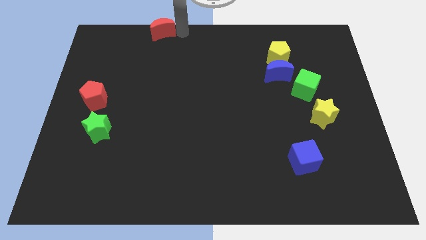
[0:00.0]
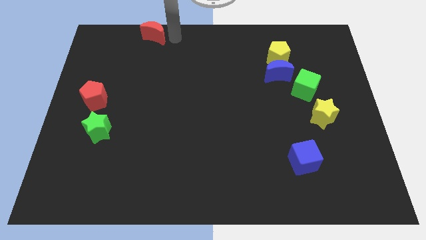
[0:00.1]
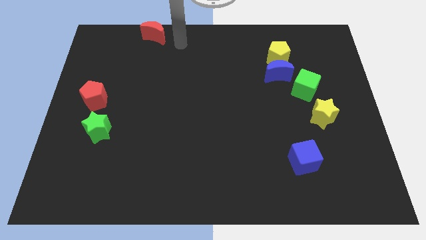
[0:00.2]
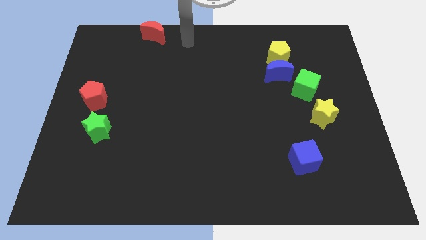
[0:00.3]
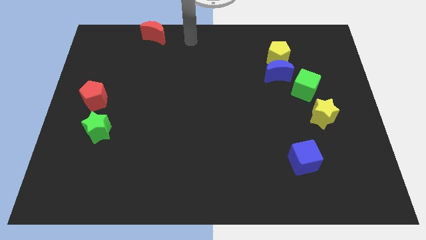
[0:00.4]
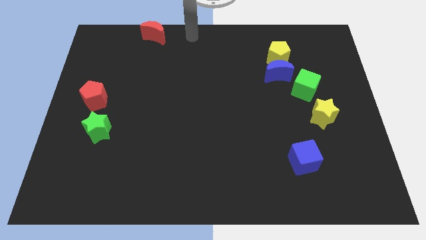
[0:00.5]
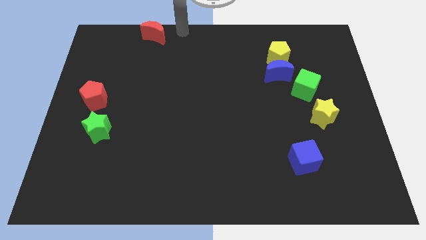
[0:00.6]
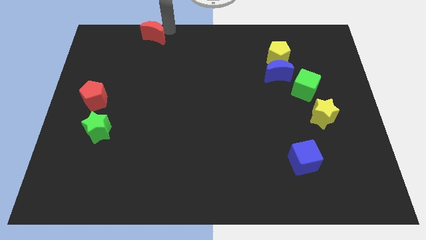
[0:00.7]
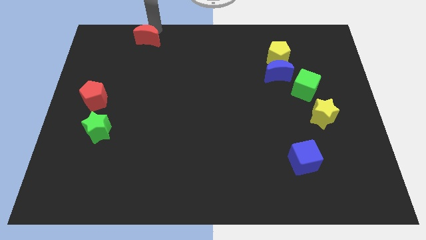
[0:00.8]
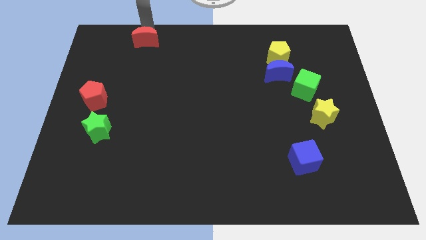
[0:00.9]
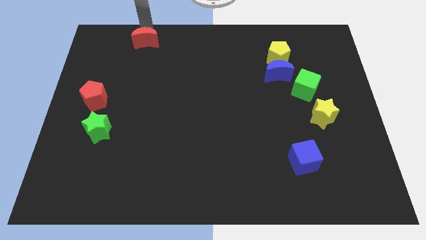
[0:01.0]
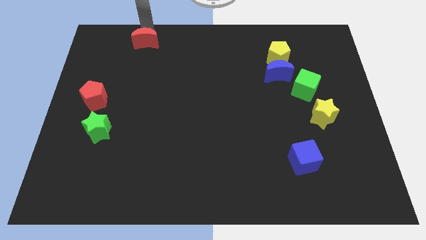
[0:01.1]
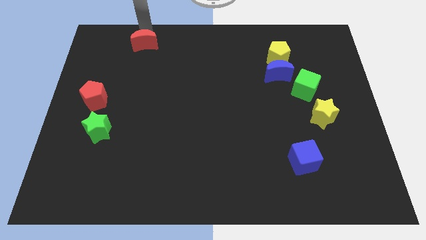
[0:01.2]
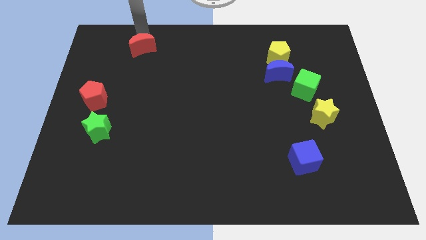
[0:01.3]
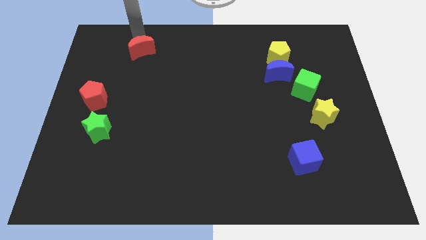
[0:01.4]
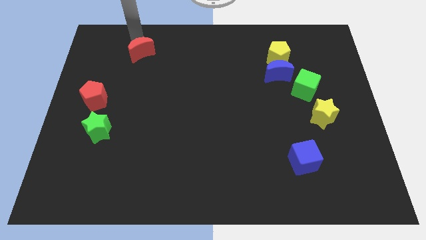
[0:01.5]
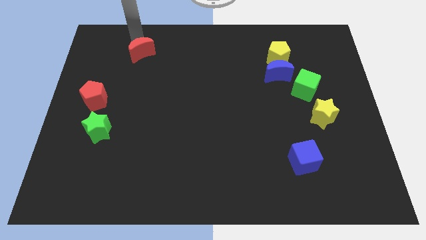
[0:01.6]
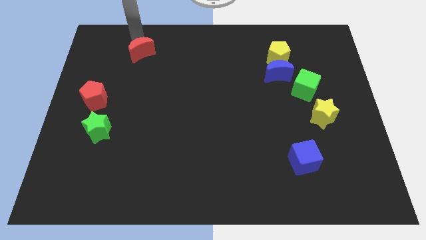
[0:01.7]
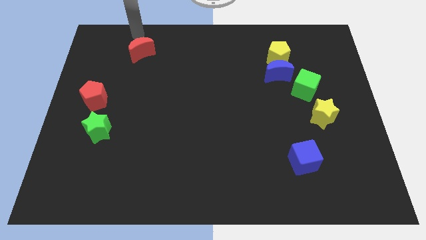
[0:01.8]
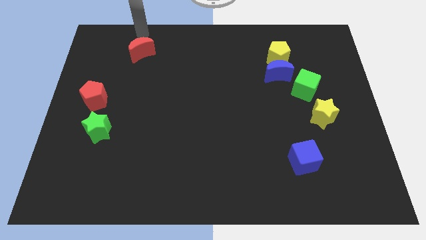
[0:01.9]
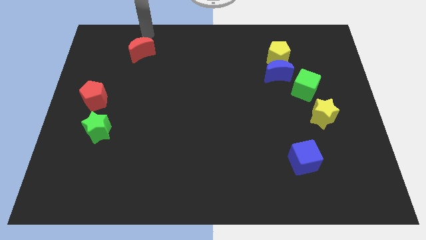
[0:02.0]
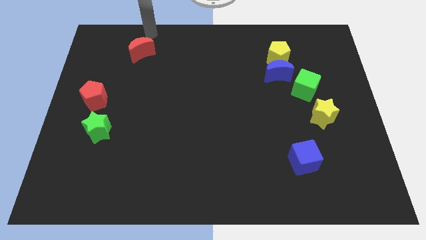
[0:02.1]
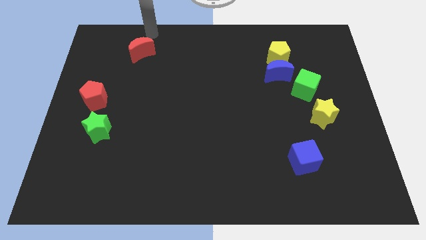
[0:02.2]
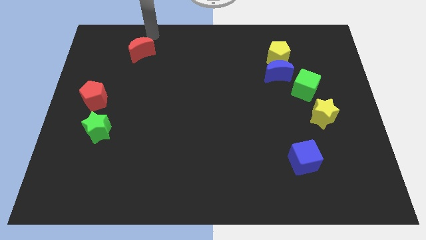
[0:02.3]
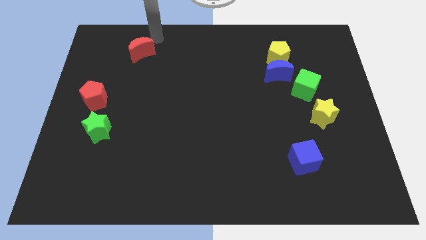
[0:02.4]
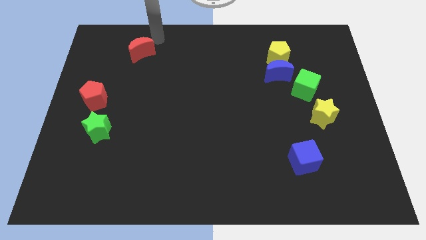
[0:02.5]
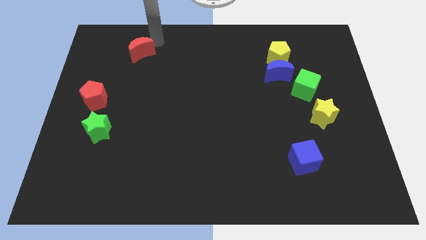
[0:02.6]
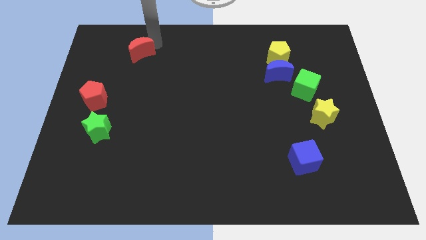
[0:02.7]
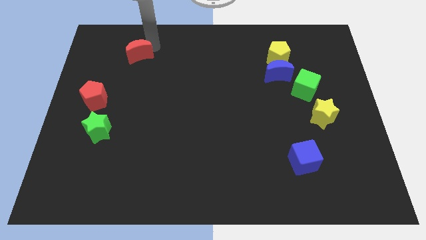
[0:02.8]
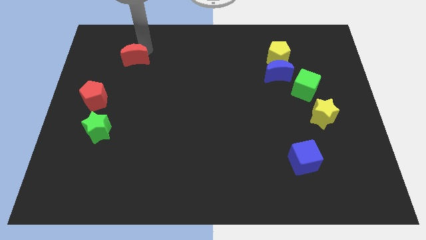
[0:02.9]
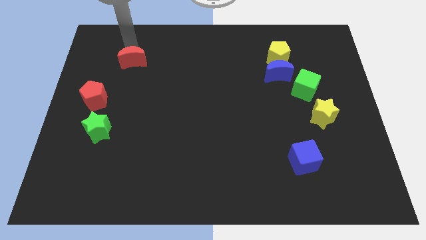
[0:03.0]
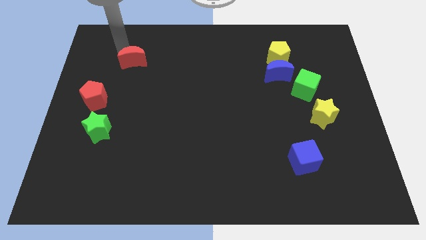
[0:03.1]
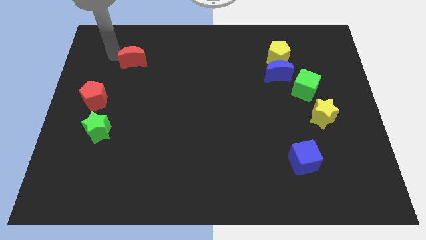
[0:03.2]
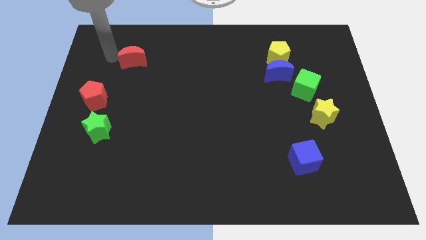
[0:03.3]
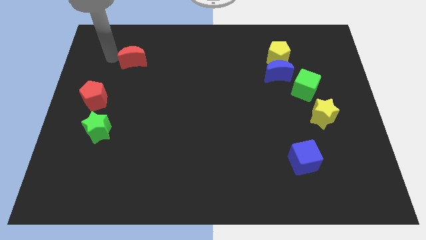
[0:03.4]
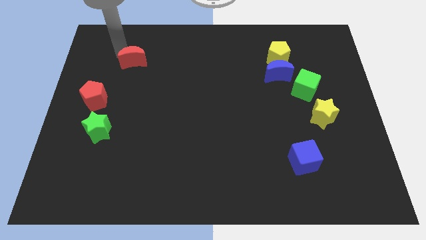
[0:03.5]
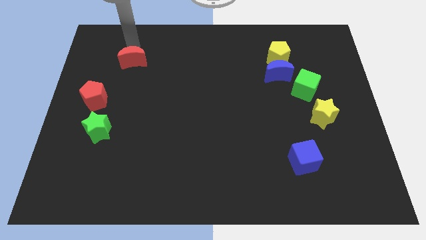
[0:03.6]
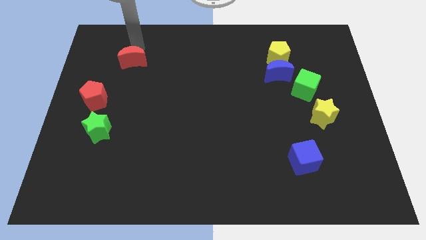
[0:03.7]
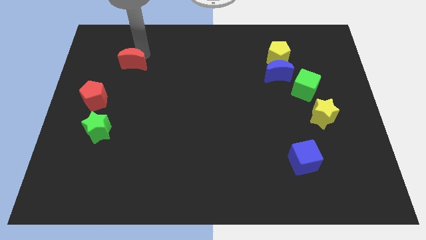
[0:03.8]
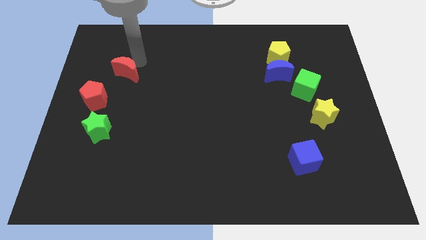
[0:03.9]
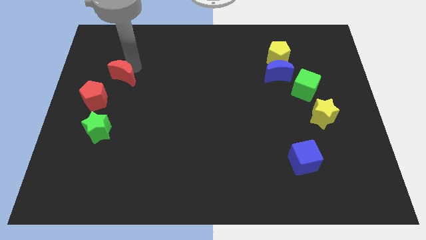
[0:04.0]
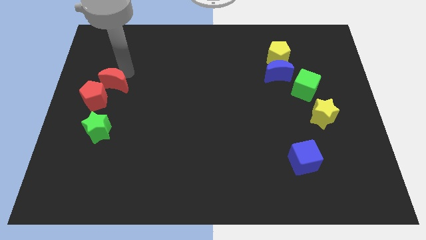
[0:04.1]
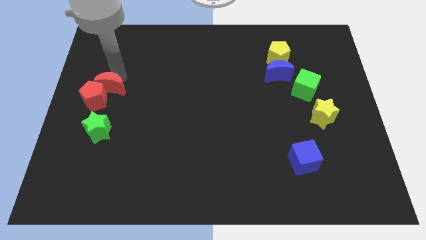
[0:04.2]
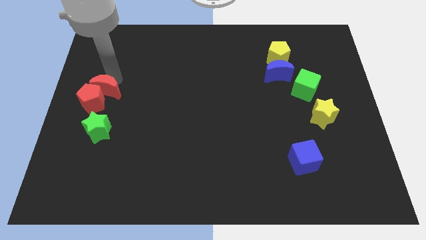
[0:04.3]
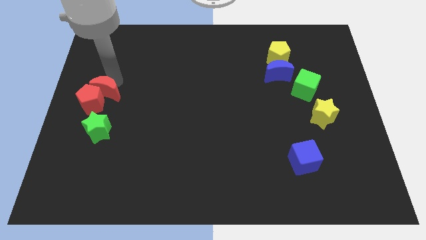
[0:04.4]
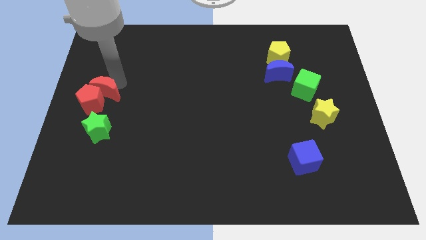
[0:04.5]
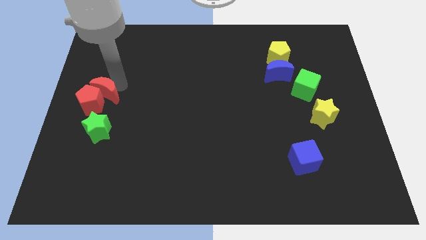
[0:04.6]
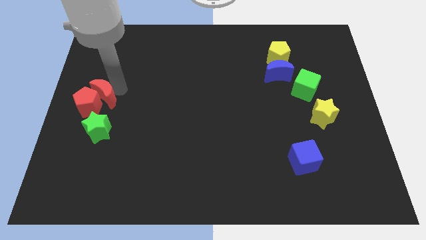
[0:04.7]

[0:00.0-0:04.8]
slide red moon into the red pentagon

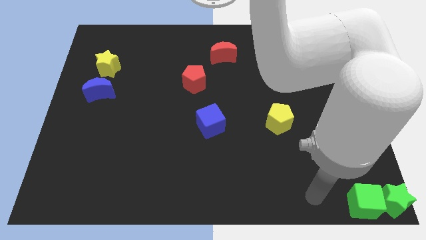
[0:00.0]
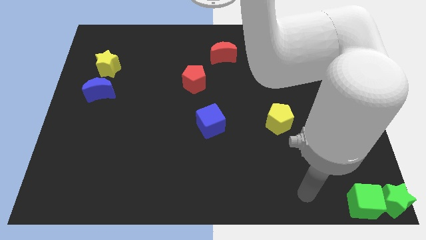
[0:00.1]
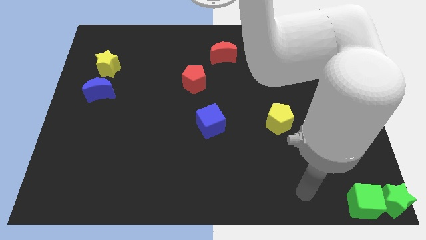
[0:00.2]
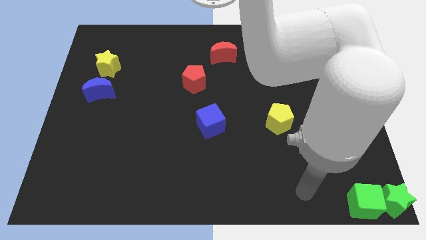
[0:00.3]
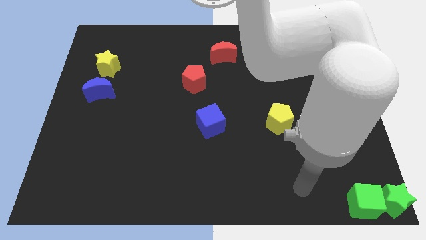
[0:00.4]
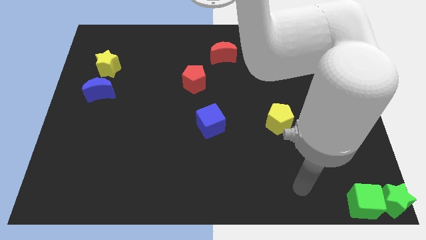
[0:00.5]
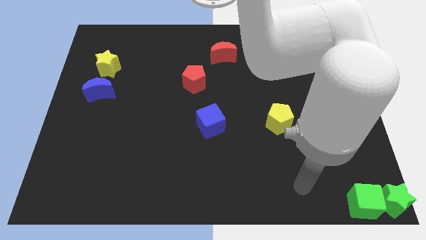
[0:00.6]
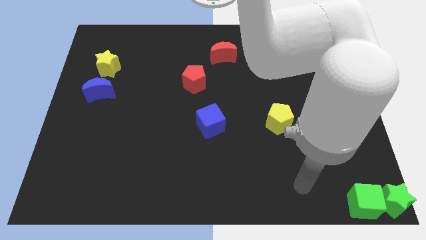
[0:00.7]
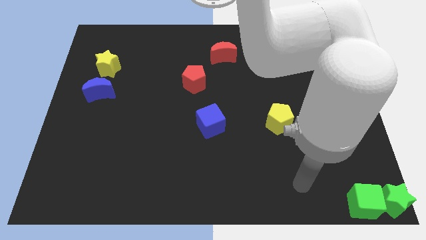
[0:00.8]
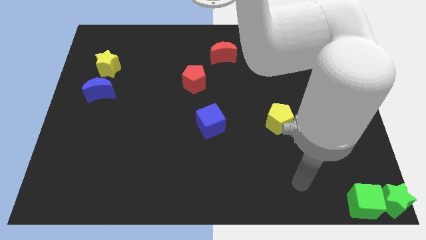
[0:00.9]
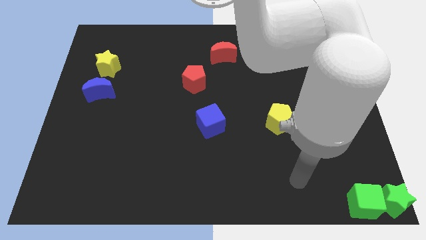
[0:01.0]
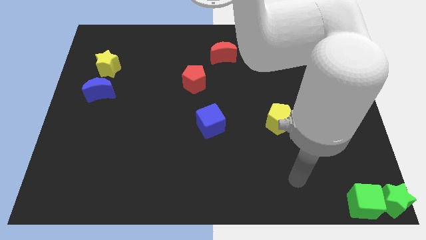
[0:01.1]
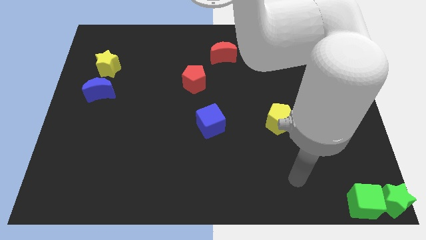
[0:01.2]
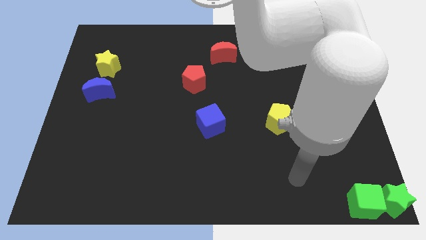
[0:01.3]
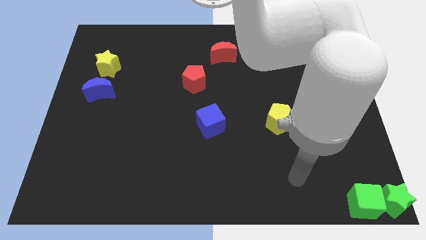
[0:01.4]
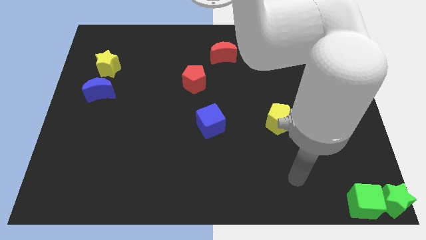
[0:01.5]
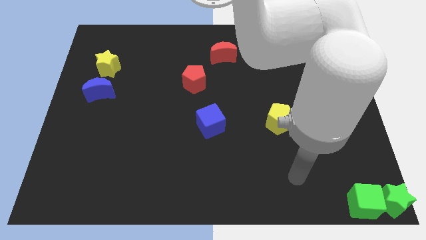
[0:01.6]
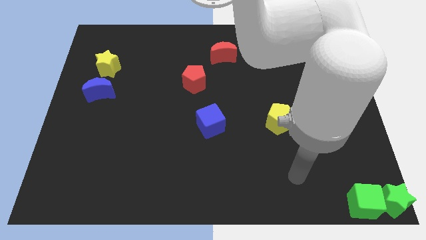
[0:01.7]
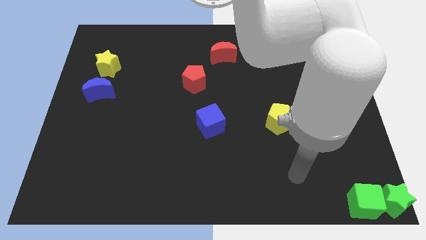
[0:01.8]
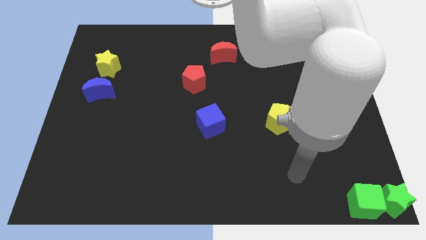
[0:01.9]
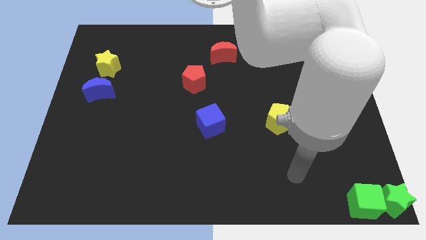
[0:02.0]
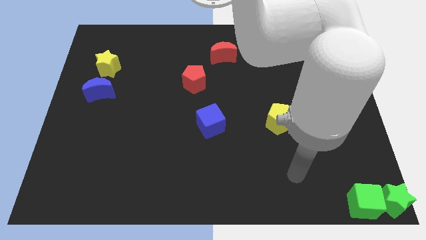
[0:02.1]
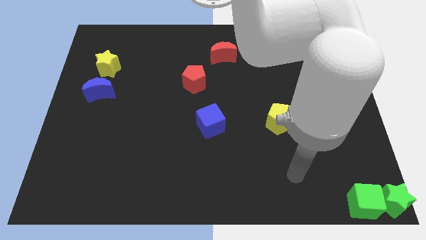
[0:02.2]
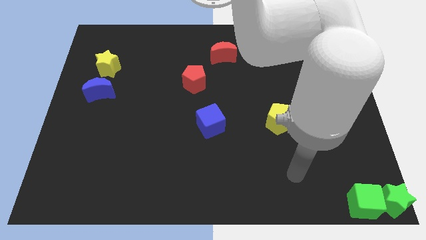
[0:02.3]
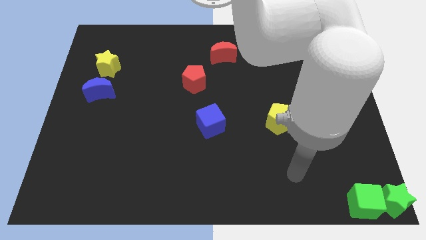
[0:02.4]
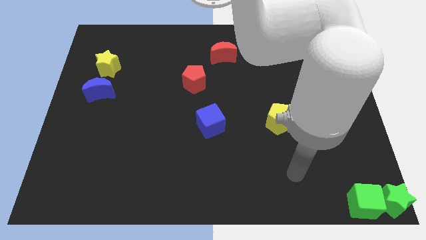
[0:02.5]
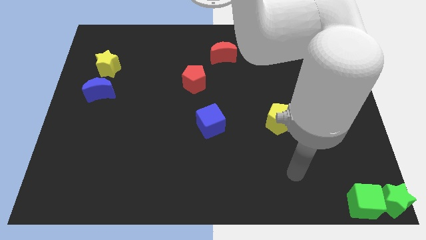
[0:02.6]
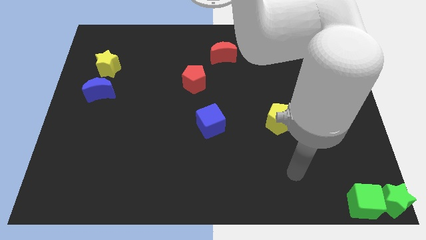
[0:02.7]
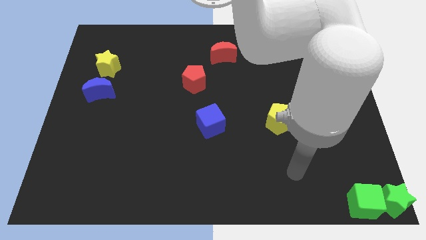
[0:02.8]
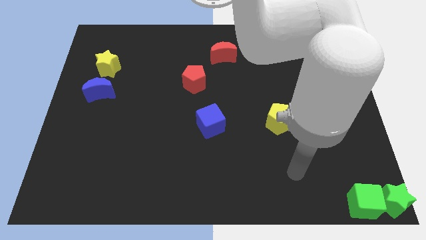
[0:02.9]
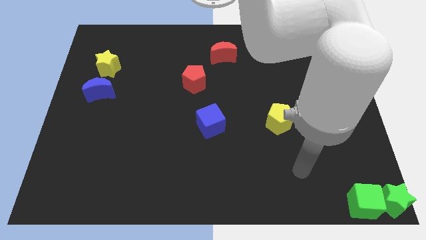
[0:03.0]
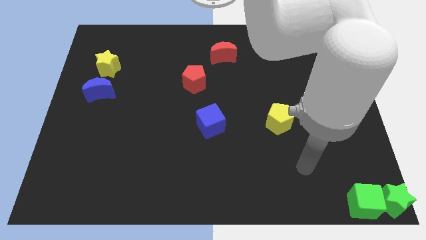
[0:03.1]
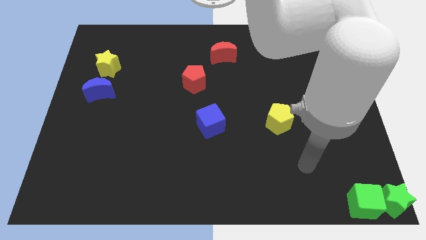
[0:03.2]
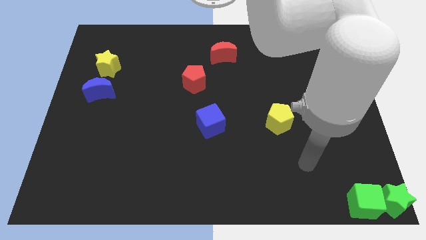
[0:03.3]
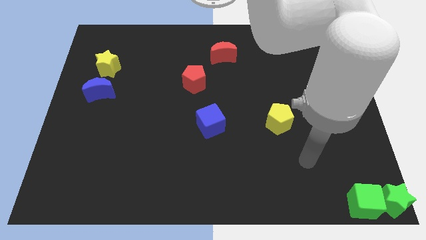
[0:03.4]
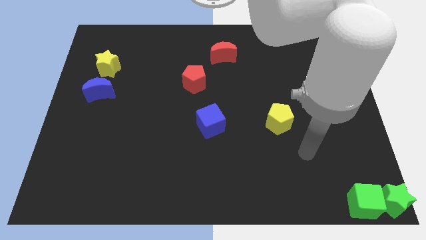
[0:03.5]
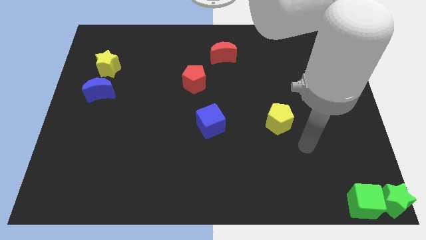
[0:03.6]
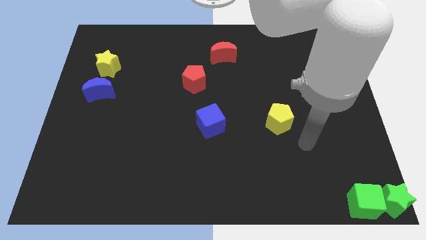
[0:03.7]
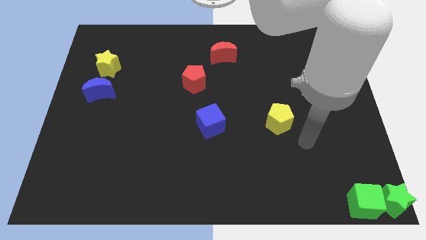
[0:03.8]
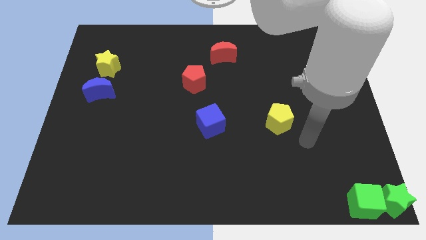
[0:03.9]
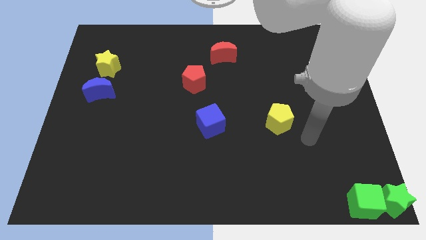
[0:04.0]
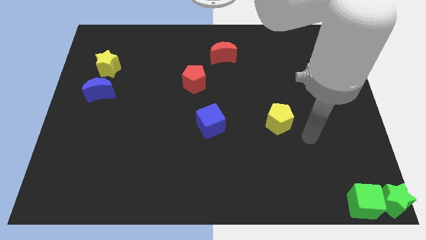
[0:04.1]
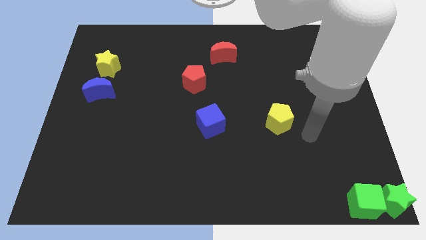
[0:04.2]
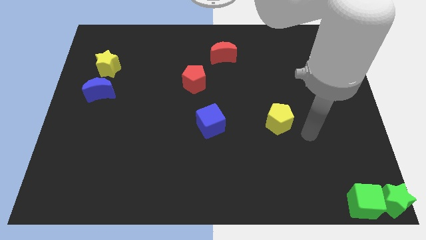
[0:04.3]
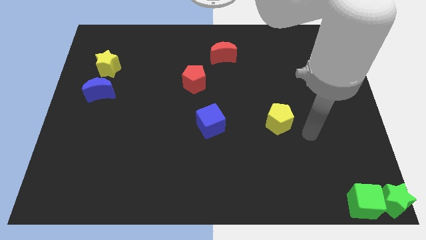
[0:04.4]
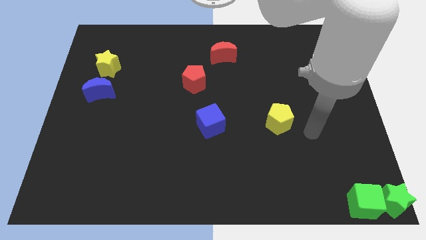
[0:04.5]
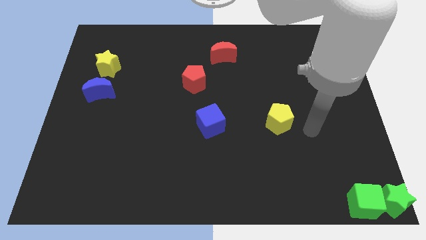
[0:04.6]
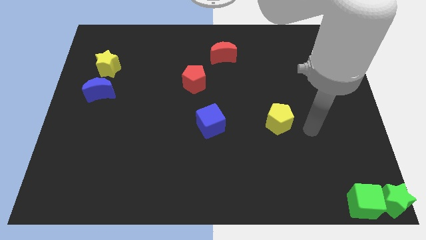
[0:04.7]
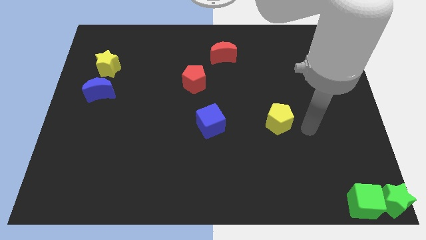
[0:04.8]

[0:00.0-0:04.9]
move your arm right to the yellow pentagon
